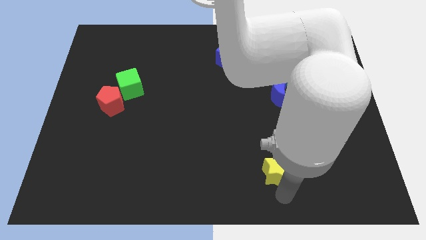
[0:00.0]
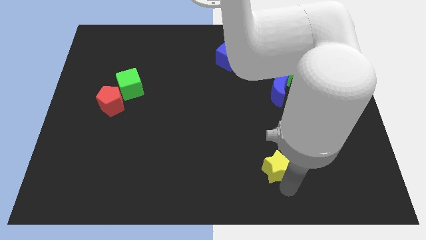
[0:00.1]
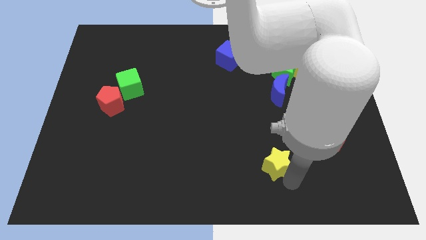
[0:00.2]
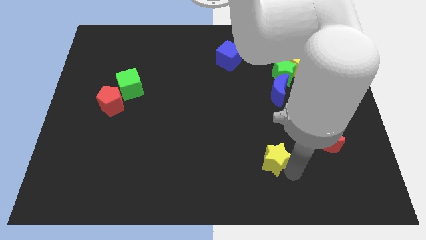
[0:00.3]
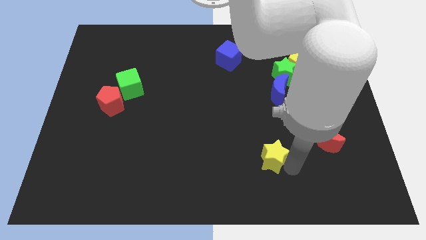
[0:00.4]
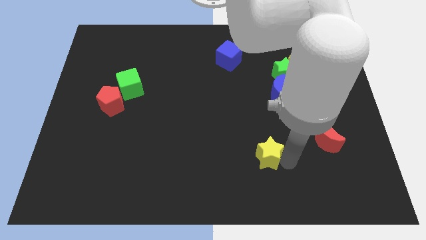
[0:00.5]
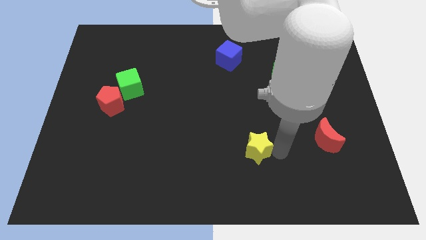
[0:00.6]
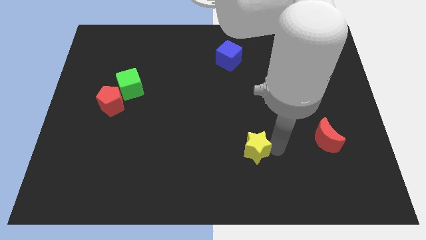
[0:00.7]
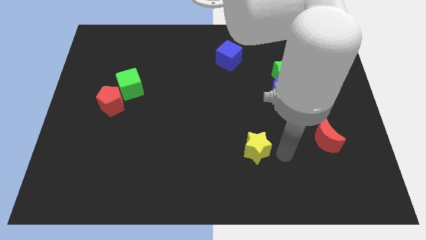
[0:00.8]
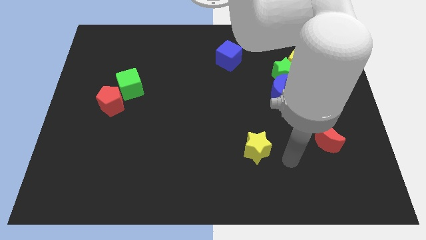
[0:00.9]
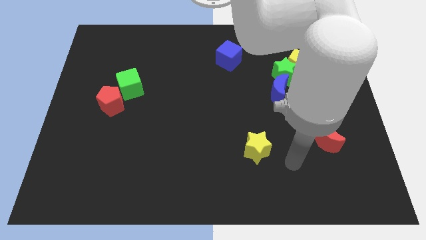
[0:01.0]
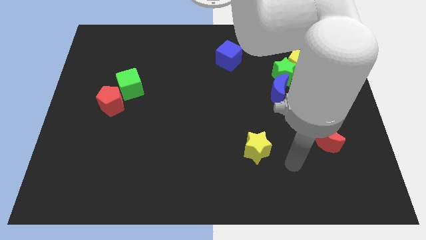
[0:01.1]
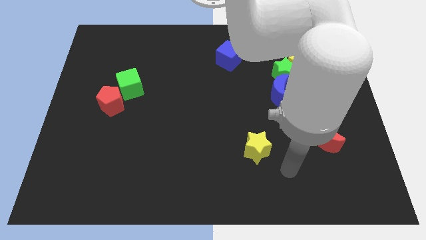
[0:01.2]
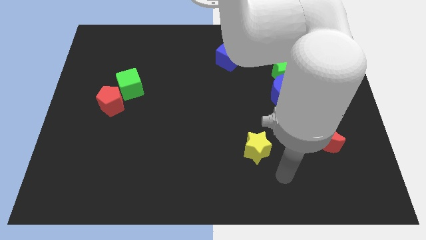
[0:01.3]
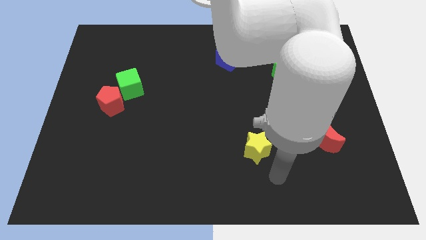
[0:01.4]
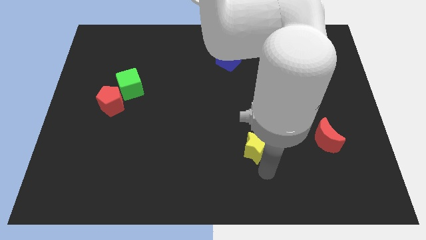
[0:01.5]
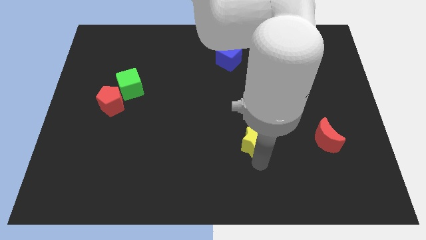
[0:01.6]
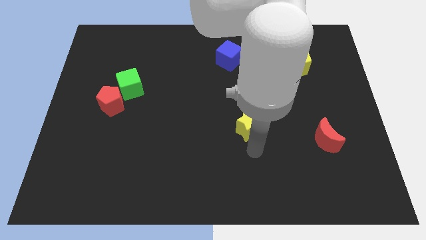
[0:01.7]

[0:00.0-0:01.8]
move the yellow star diagonal to the left of the red moon

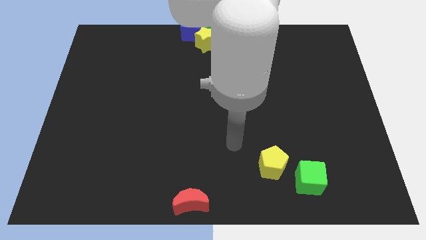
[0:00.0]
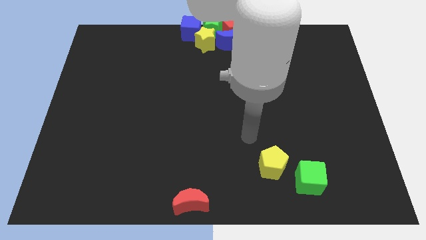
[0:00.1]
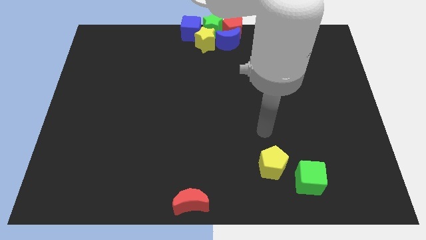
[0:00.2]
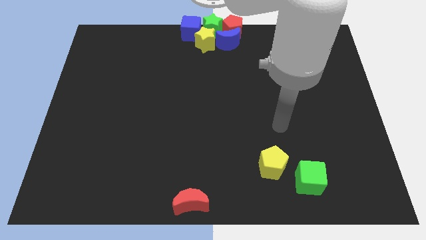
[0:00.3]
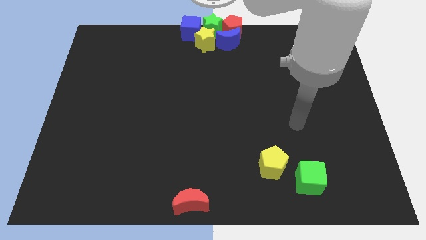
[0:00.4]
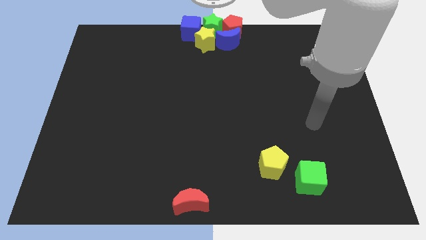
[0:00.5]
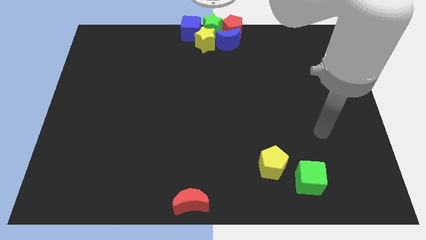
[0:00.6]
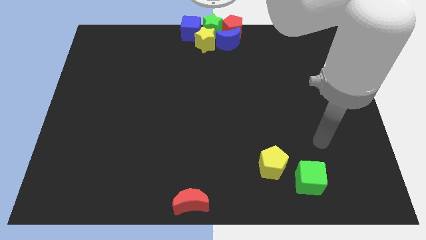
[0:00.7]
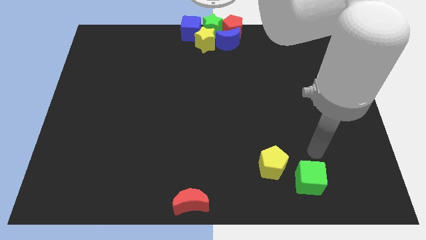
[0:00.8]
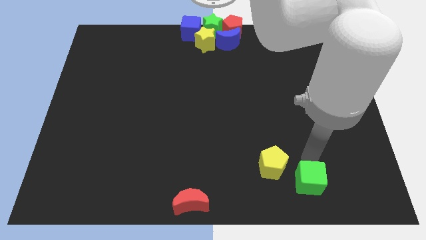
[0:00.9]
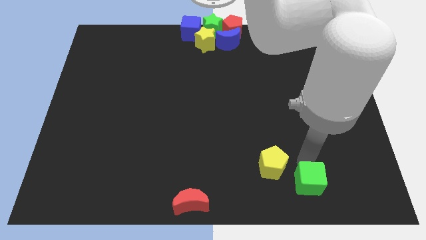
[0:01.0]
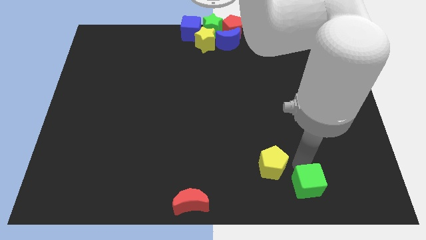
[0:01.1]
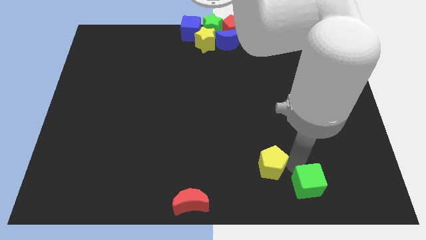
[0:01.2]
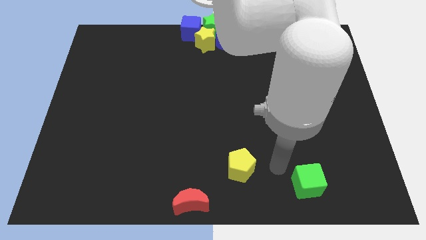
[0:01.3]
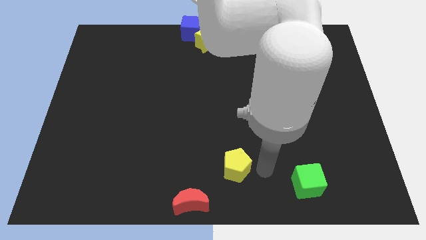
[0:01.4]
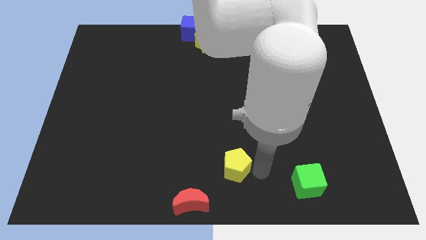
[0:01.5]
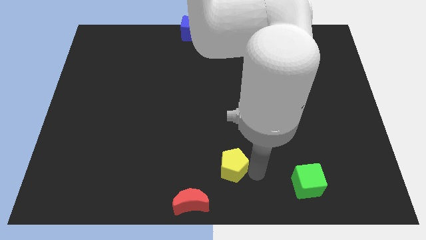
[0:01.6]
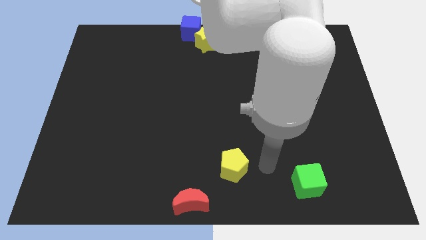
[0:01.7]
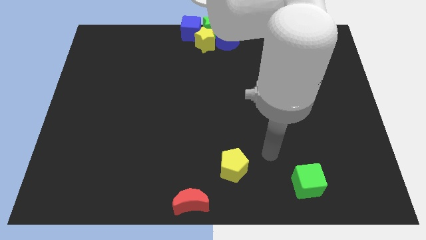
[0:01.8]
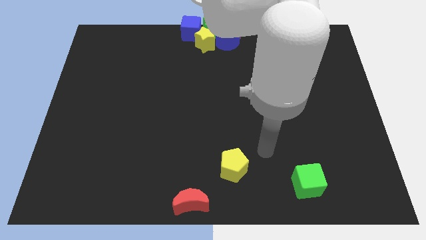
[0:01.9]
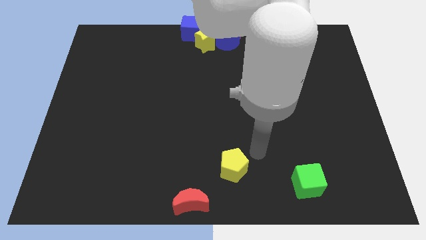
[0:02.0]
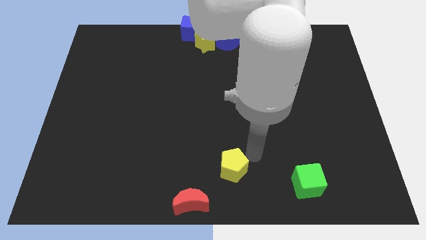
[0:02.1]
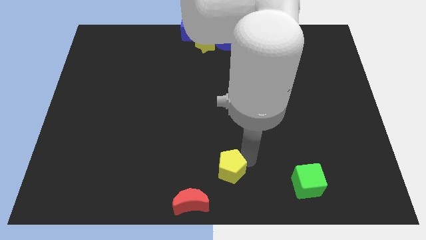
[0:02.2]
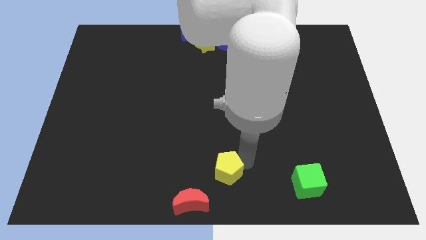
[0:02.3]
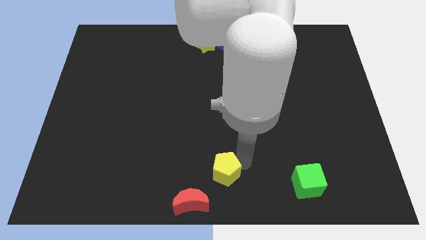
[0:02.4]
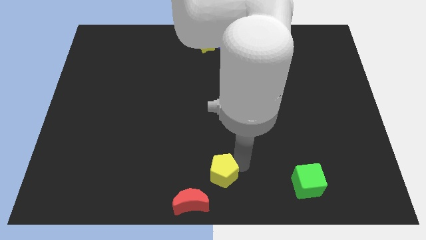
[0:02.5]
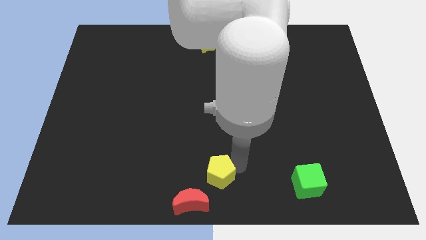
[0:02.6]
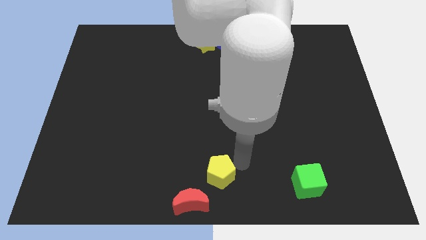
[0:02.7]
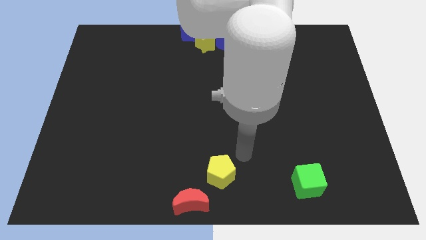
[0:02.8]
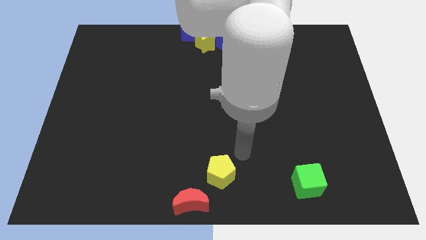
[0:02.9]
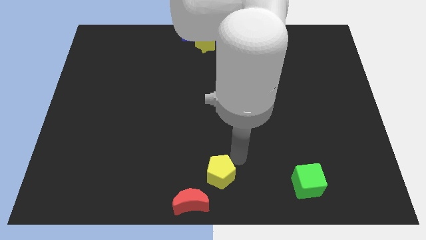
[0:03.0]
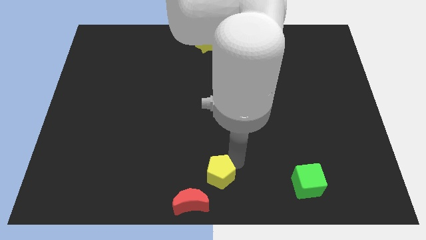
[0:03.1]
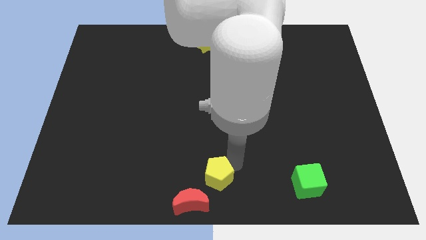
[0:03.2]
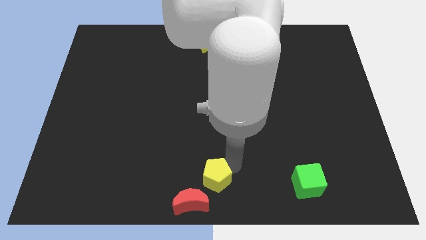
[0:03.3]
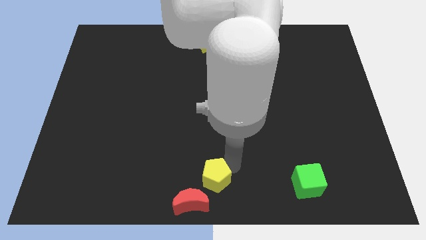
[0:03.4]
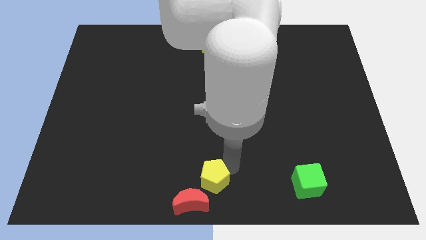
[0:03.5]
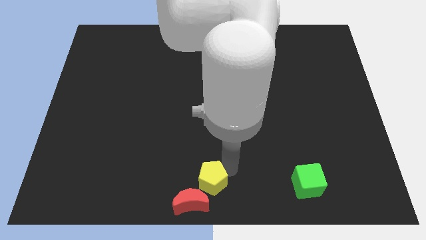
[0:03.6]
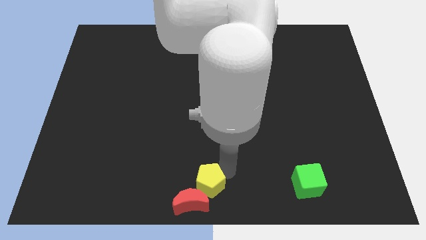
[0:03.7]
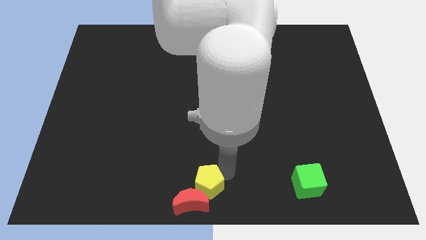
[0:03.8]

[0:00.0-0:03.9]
push yellow pentagon apart from green block

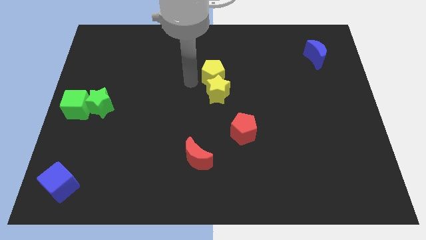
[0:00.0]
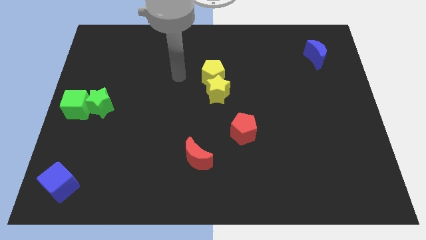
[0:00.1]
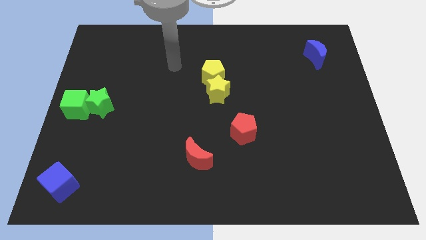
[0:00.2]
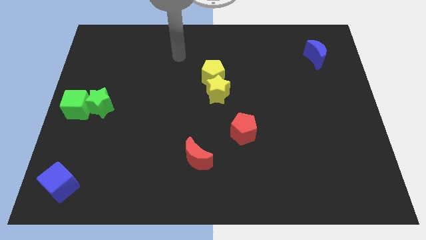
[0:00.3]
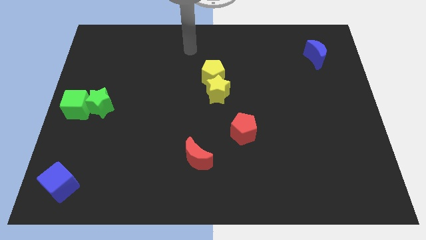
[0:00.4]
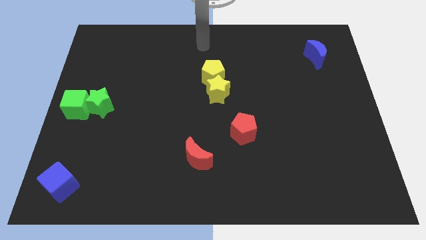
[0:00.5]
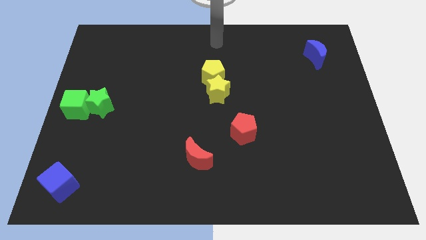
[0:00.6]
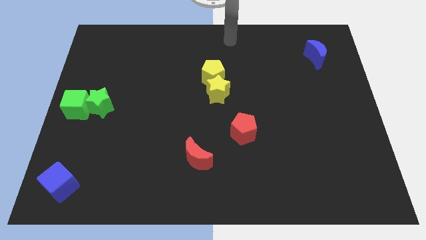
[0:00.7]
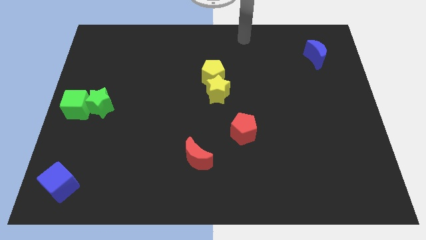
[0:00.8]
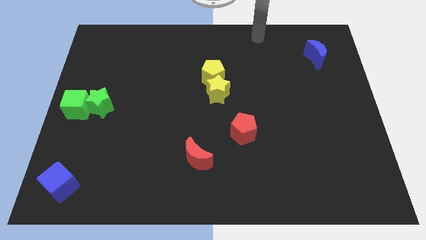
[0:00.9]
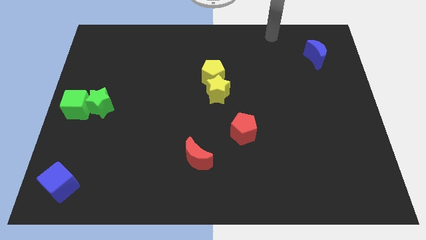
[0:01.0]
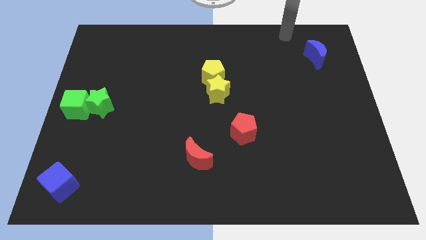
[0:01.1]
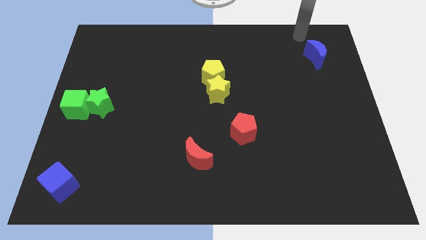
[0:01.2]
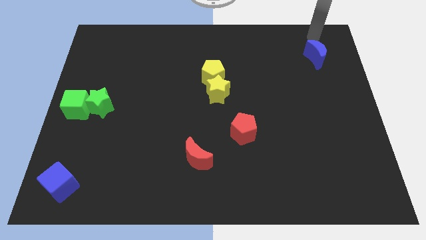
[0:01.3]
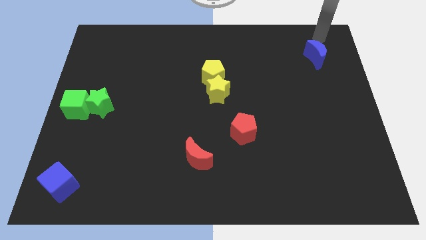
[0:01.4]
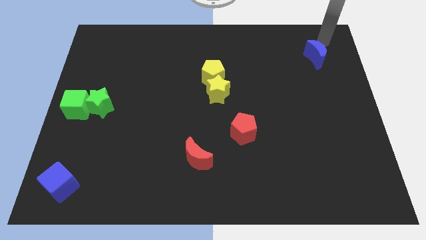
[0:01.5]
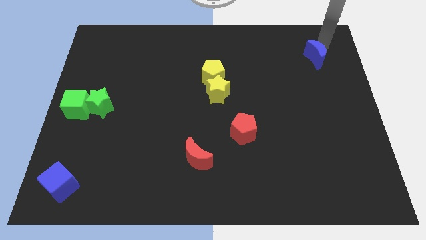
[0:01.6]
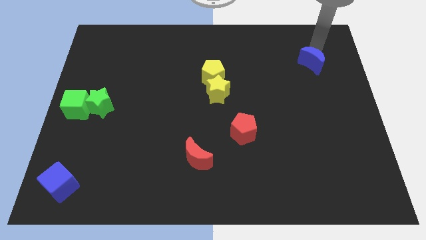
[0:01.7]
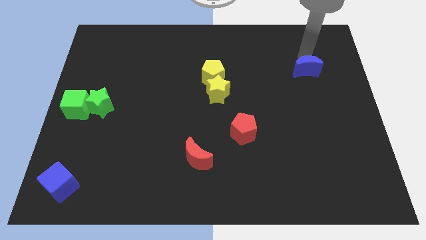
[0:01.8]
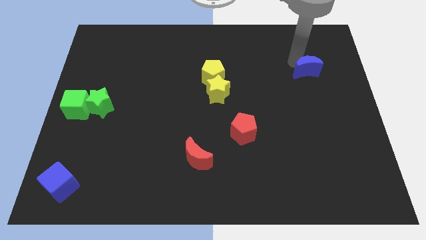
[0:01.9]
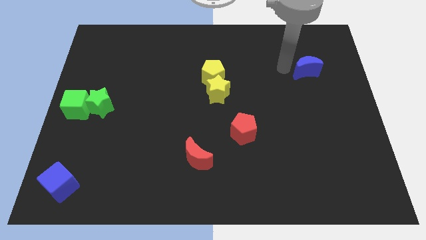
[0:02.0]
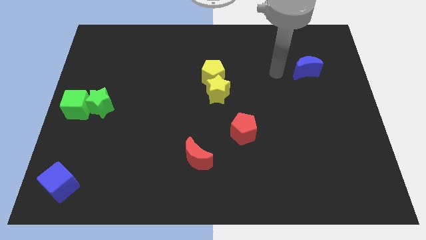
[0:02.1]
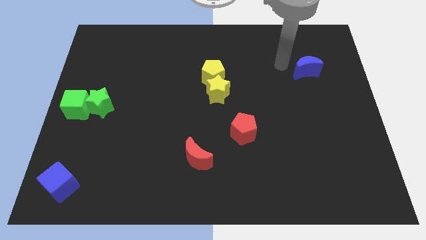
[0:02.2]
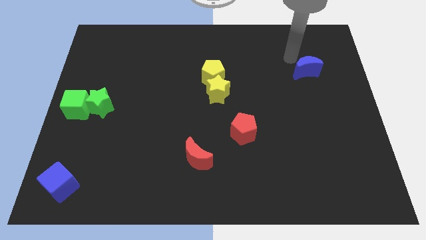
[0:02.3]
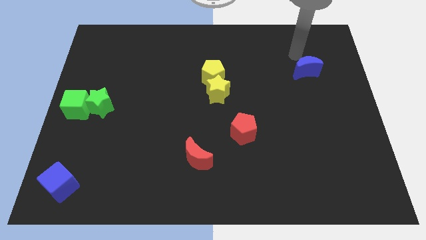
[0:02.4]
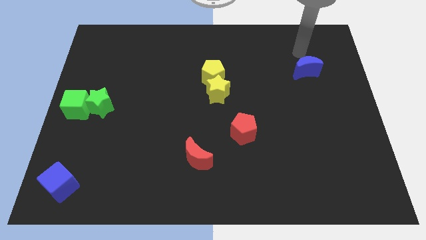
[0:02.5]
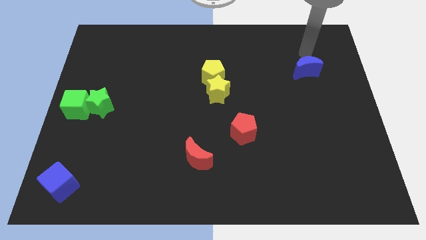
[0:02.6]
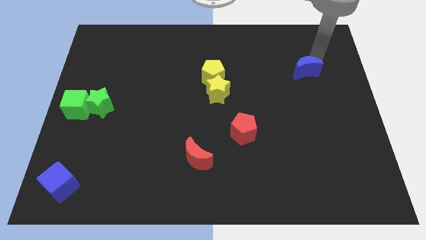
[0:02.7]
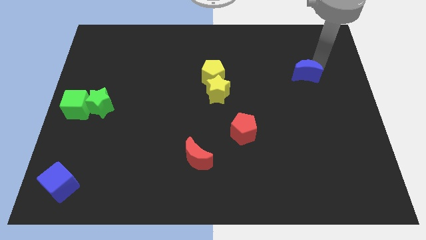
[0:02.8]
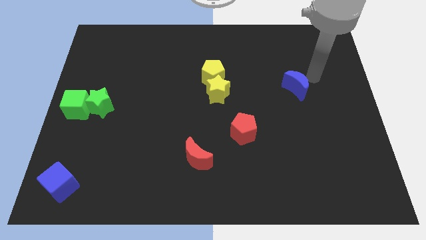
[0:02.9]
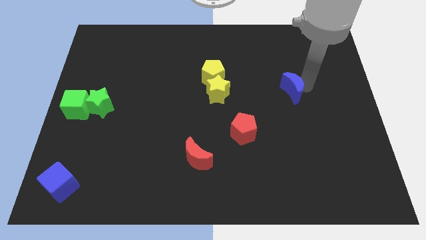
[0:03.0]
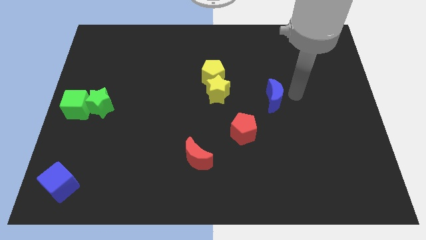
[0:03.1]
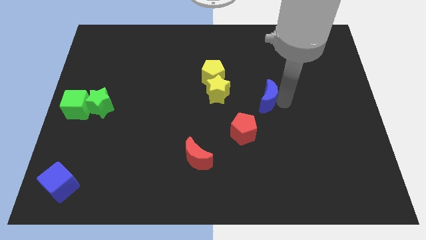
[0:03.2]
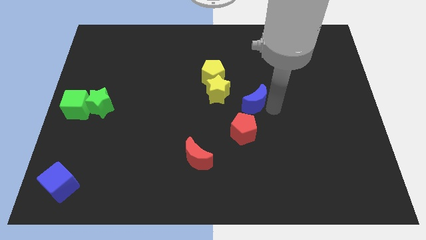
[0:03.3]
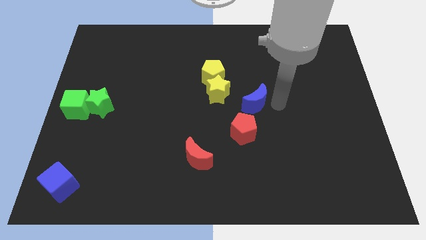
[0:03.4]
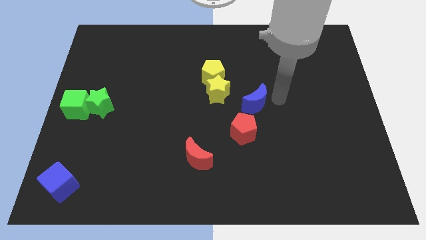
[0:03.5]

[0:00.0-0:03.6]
place the blue crescent above the red pentagon
